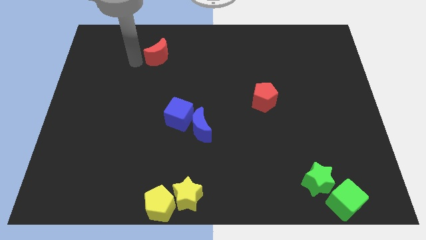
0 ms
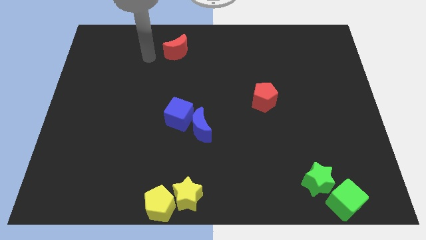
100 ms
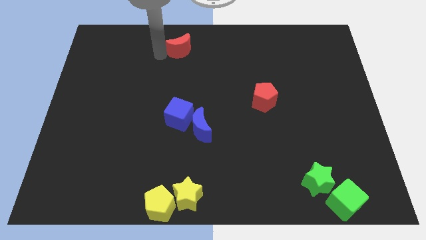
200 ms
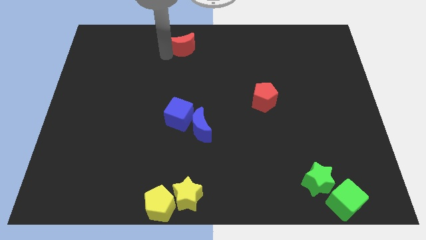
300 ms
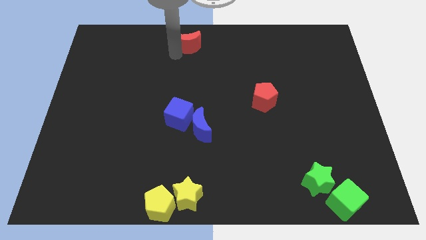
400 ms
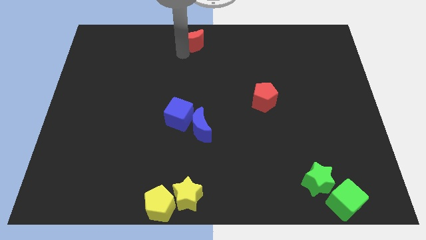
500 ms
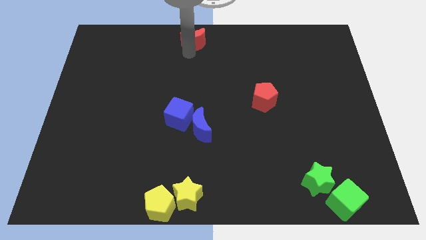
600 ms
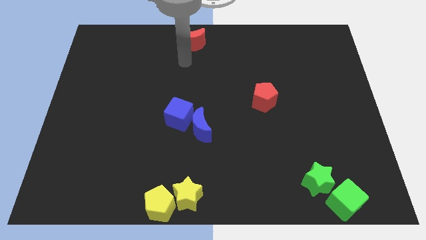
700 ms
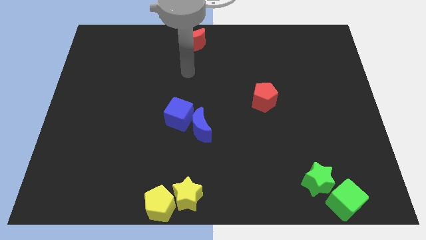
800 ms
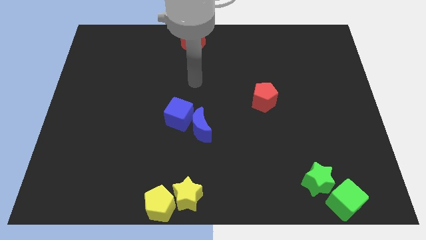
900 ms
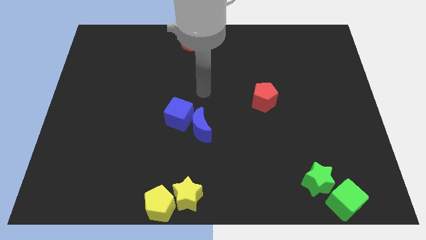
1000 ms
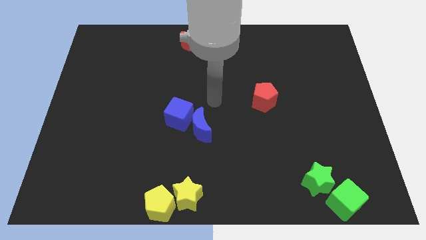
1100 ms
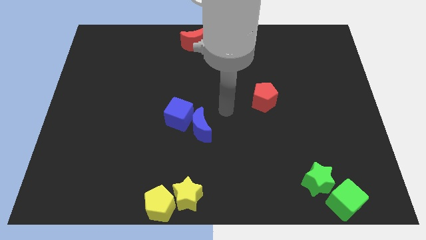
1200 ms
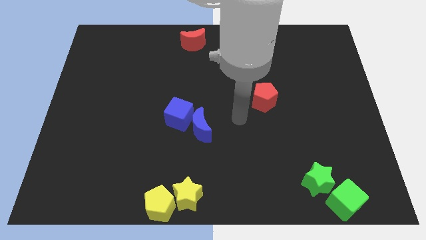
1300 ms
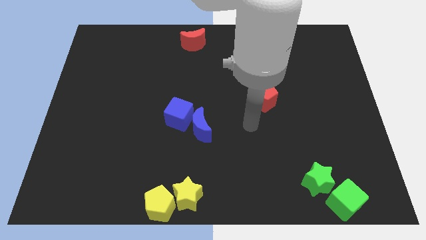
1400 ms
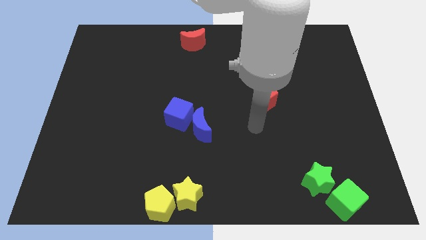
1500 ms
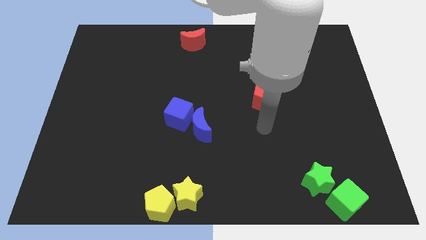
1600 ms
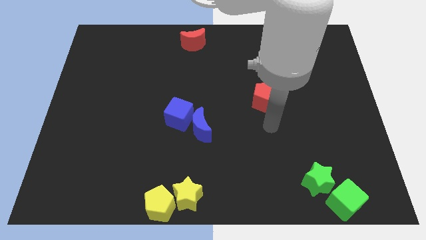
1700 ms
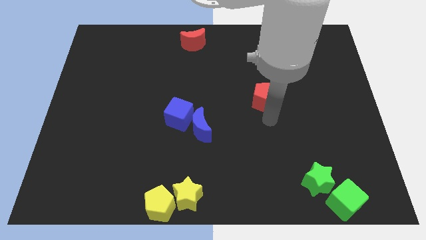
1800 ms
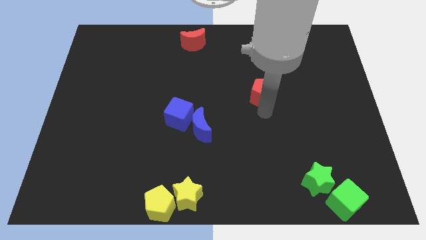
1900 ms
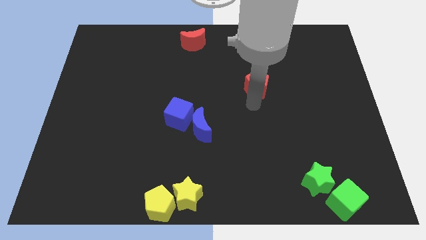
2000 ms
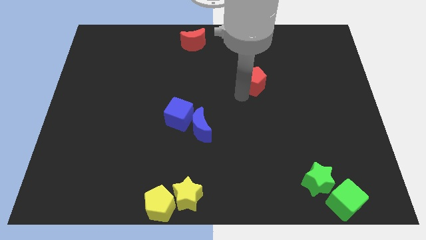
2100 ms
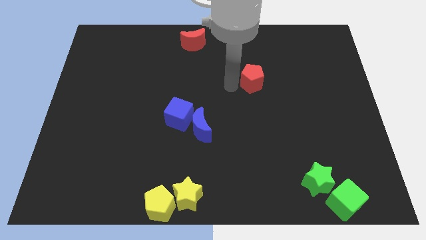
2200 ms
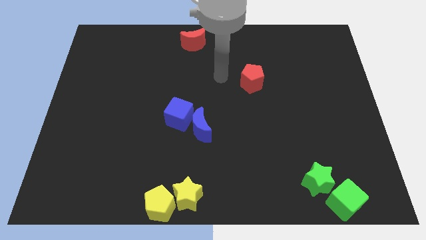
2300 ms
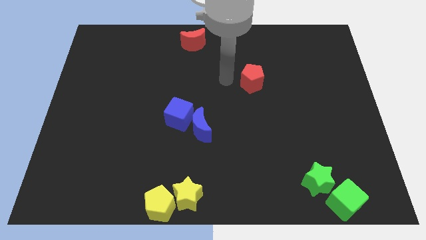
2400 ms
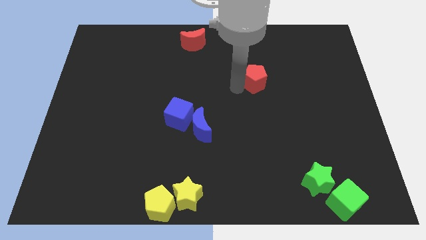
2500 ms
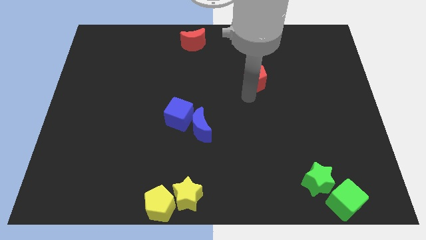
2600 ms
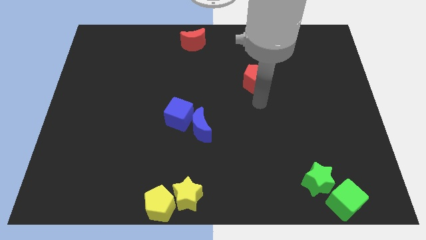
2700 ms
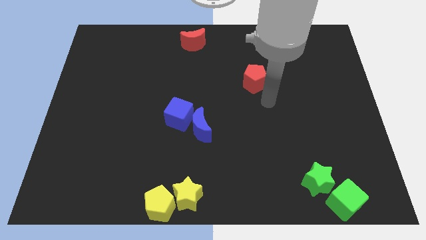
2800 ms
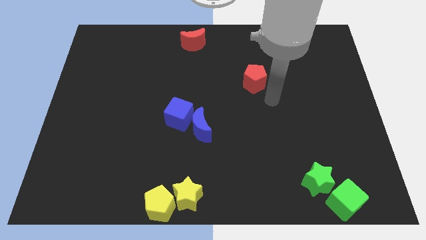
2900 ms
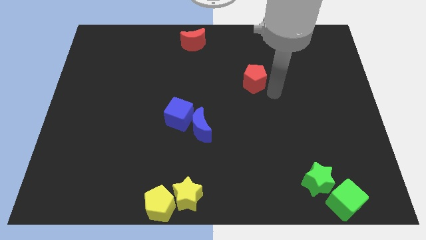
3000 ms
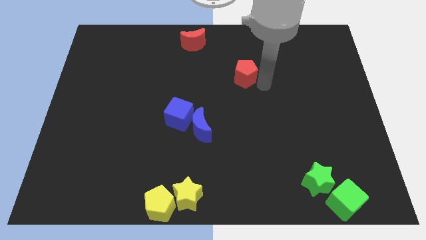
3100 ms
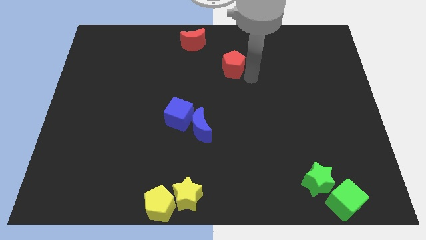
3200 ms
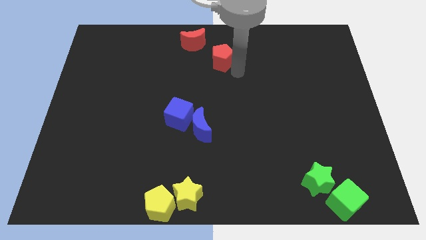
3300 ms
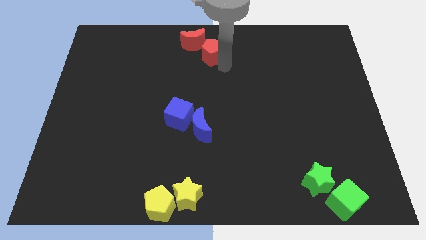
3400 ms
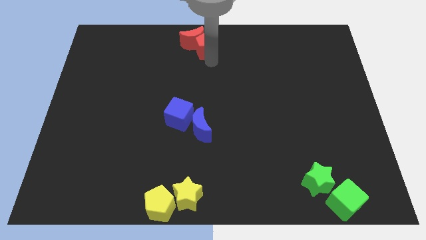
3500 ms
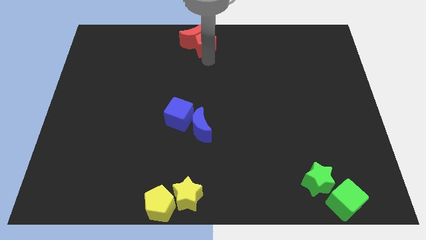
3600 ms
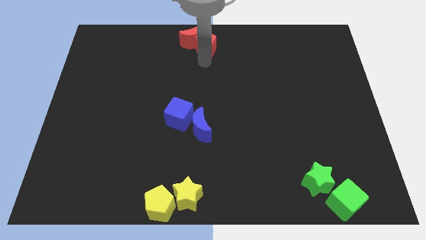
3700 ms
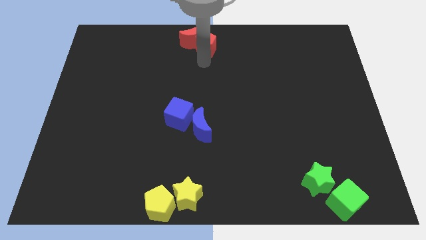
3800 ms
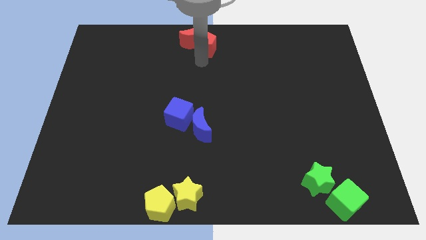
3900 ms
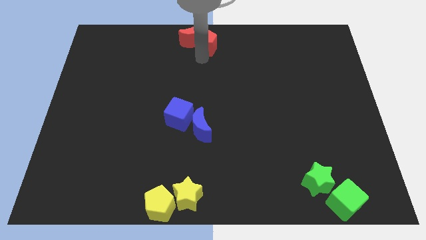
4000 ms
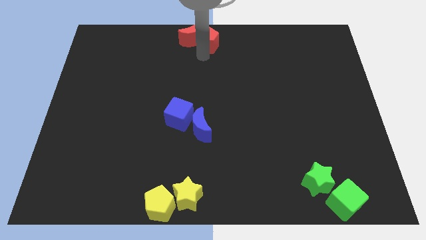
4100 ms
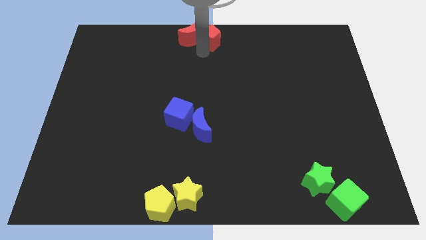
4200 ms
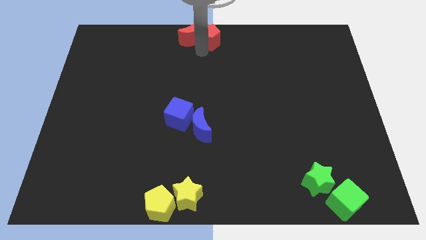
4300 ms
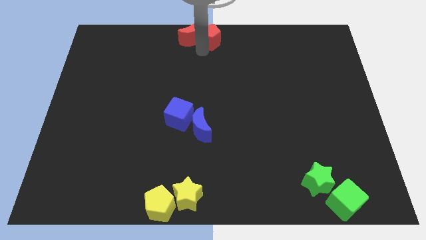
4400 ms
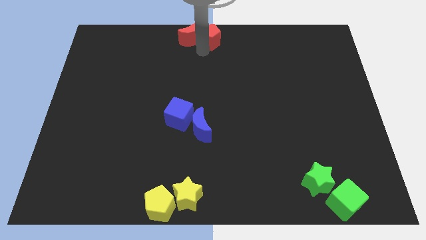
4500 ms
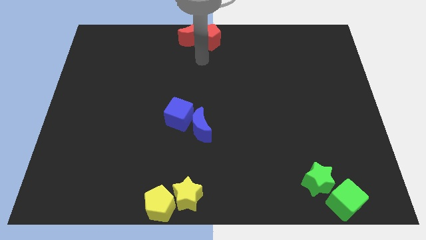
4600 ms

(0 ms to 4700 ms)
put the red things at the top center of the board

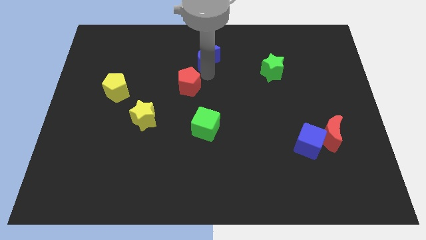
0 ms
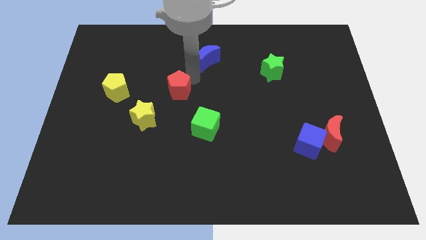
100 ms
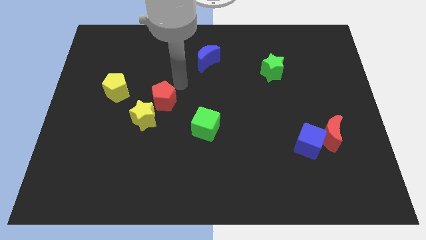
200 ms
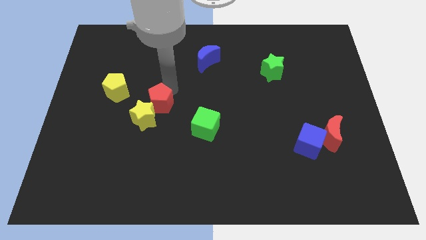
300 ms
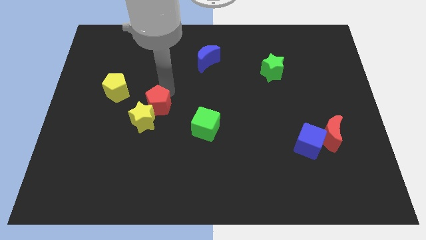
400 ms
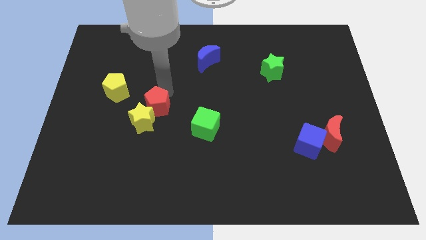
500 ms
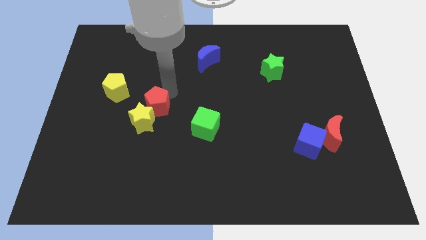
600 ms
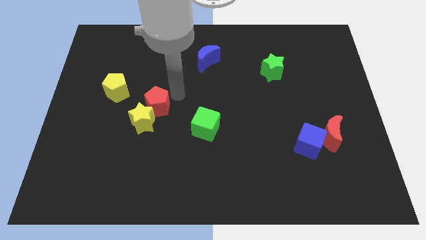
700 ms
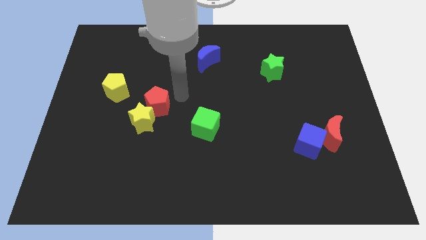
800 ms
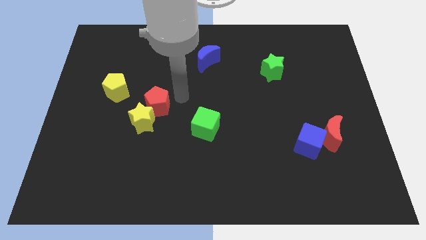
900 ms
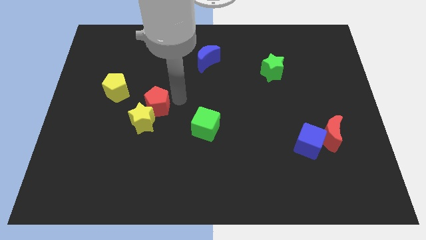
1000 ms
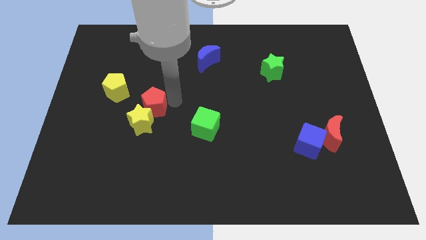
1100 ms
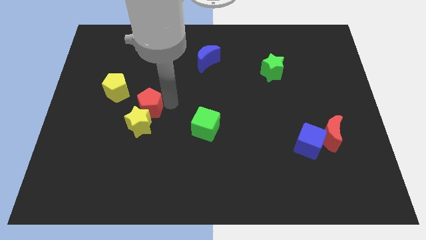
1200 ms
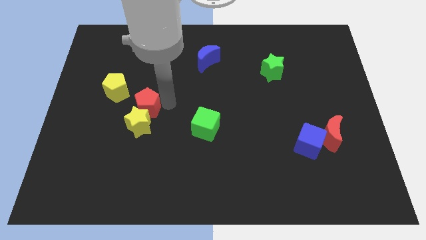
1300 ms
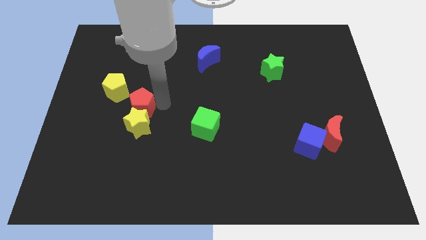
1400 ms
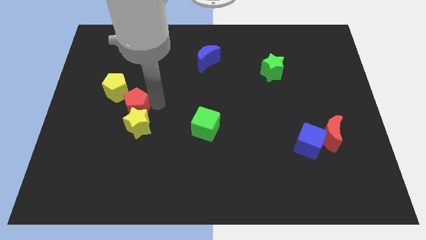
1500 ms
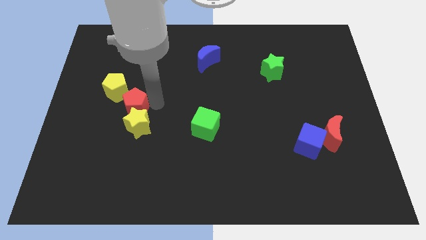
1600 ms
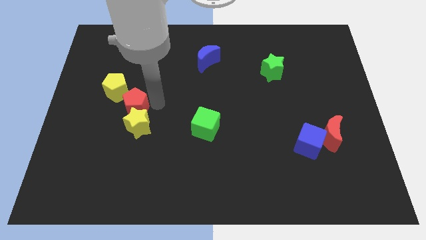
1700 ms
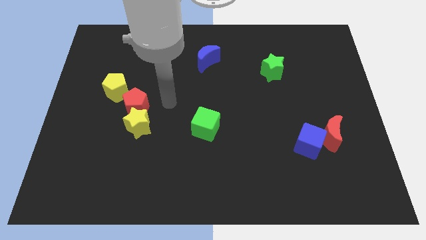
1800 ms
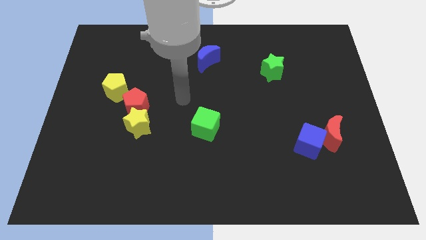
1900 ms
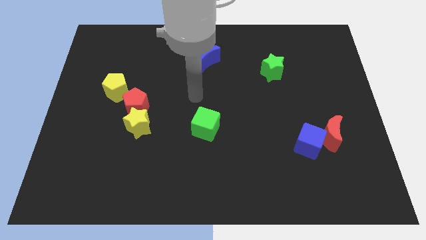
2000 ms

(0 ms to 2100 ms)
push the red pentagon in between the yellow pentagon and yellow star

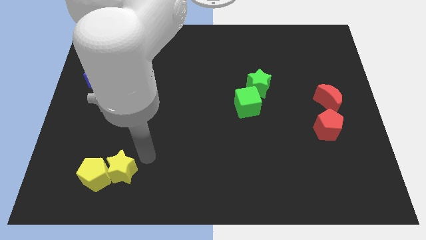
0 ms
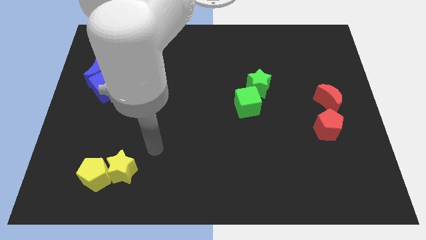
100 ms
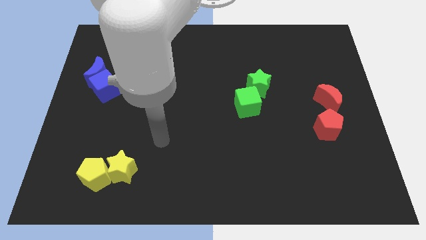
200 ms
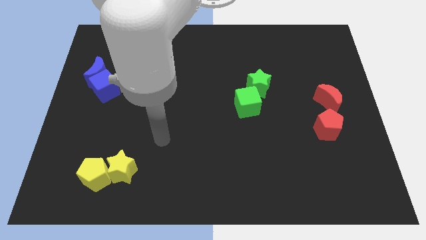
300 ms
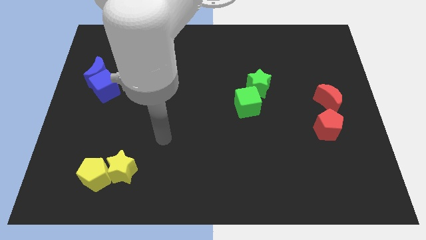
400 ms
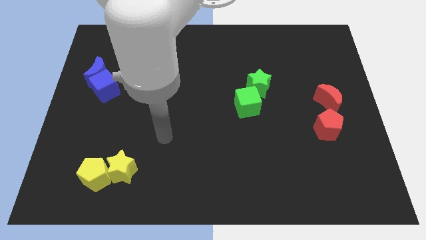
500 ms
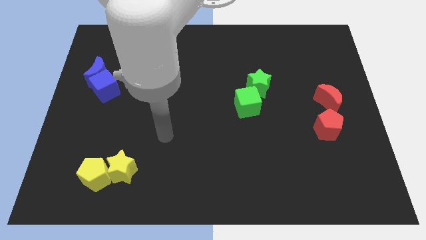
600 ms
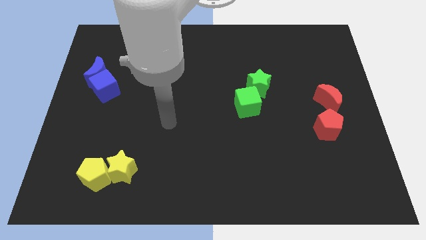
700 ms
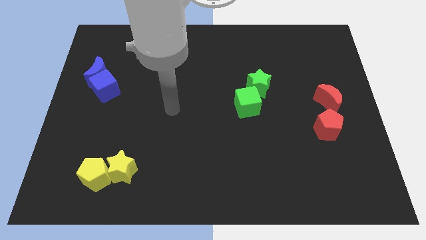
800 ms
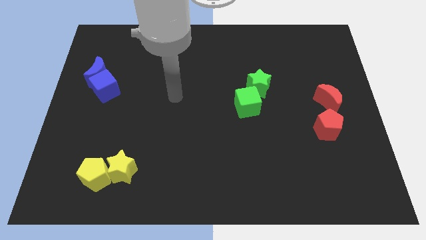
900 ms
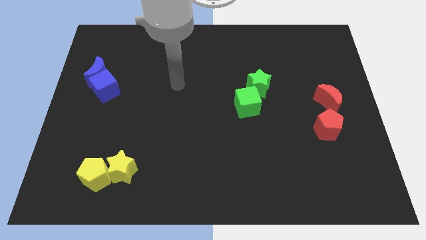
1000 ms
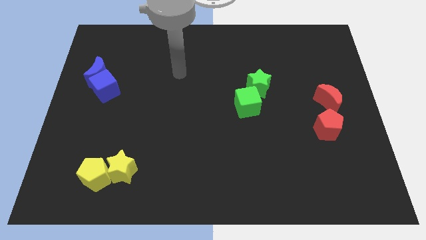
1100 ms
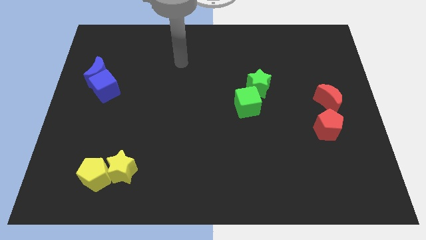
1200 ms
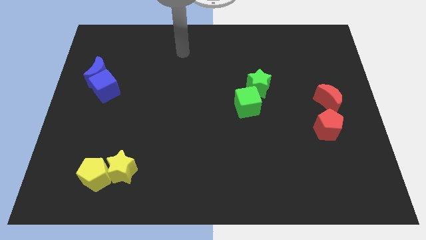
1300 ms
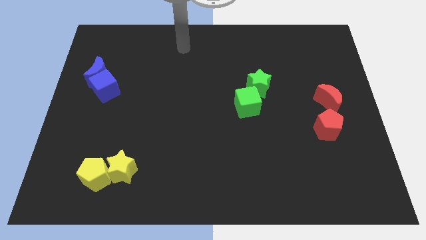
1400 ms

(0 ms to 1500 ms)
move your arm to the top center of the board

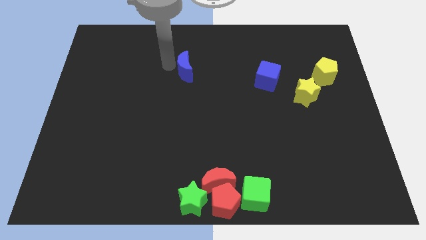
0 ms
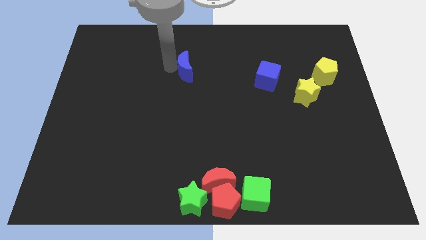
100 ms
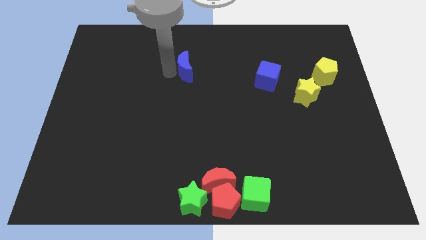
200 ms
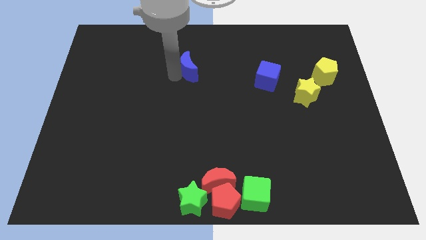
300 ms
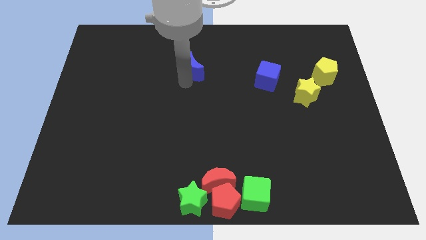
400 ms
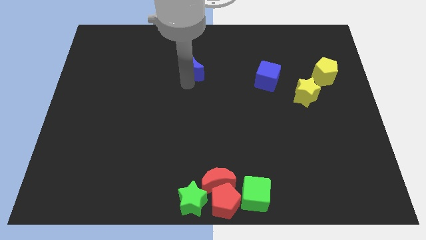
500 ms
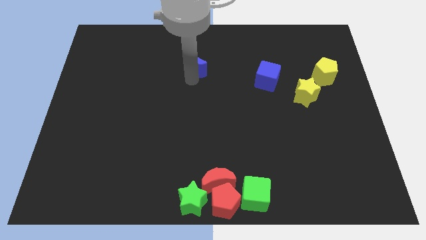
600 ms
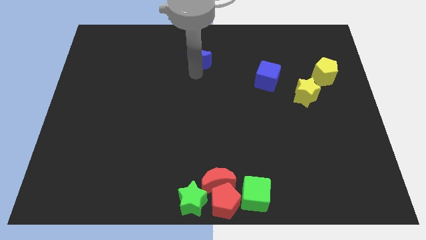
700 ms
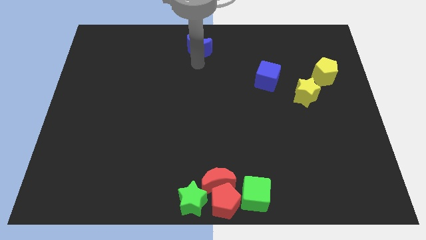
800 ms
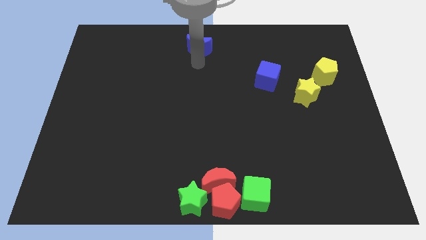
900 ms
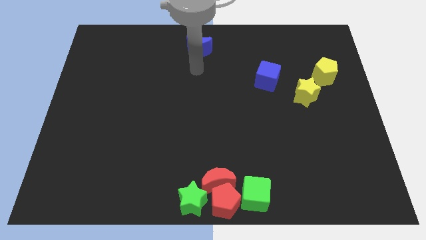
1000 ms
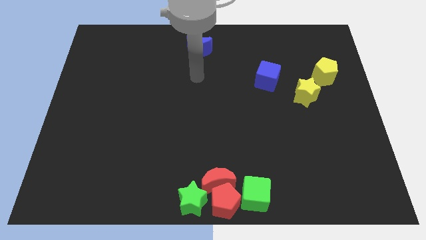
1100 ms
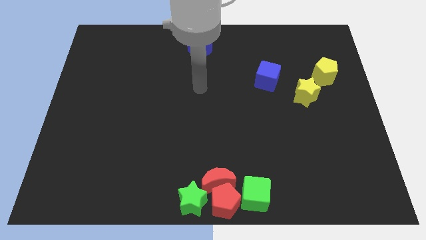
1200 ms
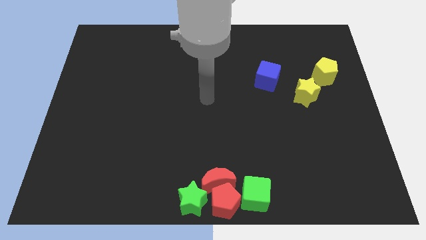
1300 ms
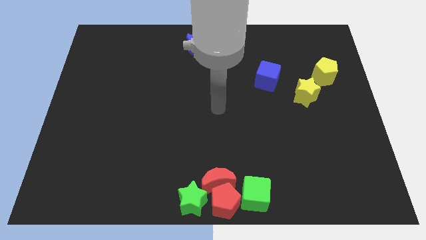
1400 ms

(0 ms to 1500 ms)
place the blue moon slightly at the top center of the board
